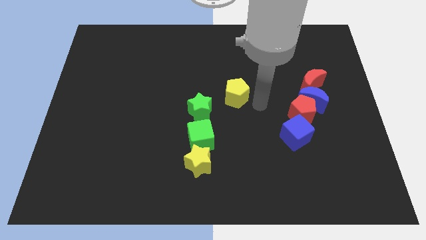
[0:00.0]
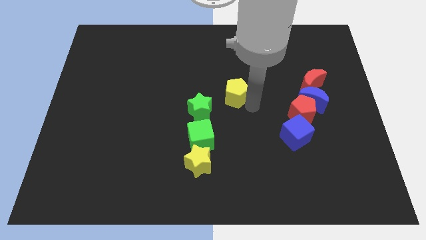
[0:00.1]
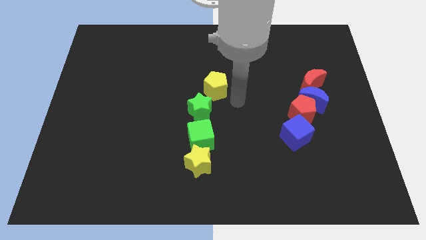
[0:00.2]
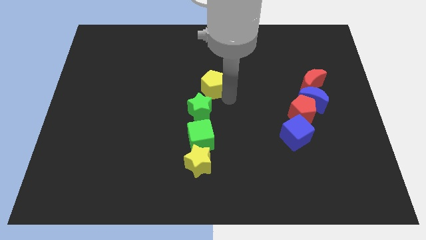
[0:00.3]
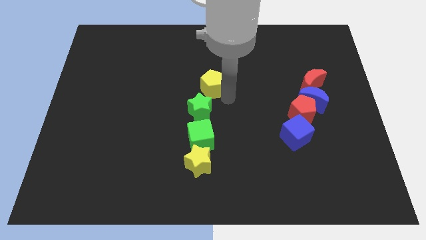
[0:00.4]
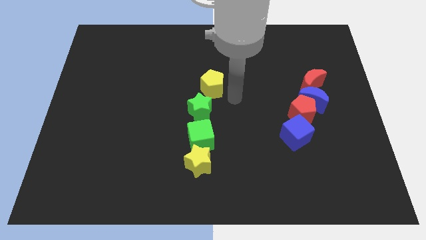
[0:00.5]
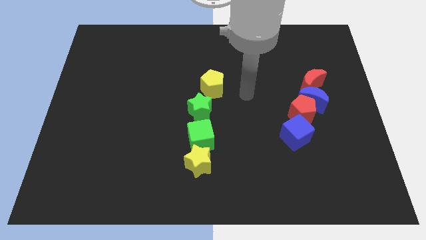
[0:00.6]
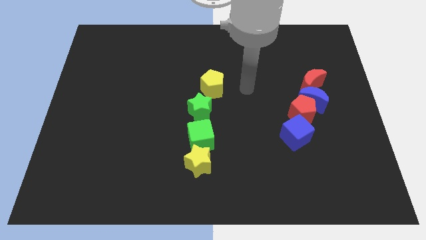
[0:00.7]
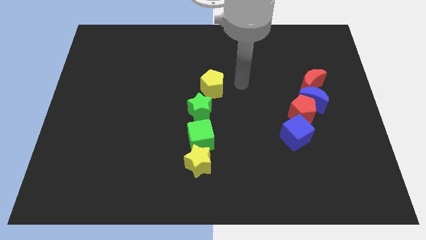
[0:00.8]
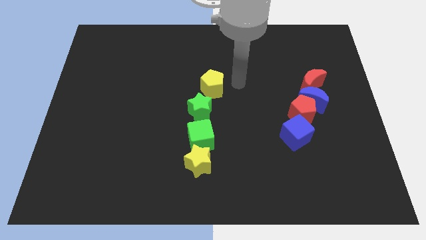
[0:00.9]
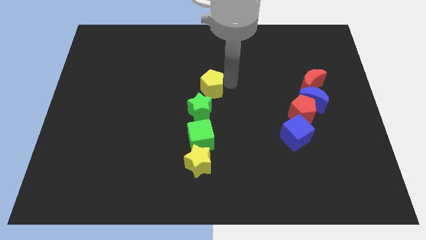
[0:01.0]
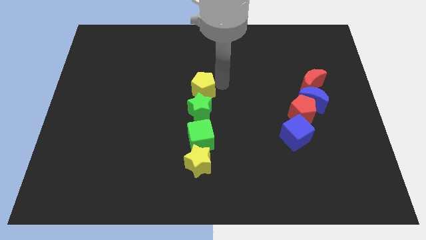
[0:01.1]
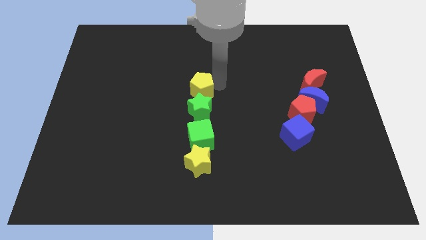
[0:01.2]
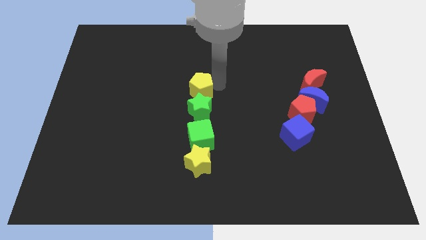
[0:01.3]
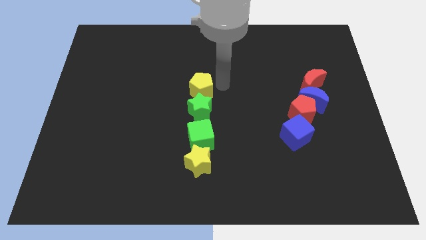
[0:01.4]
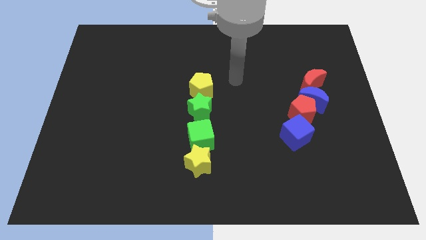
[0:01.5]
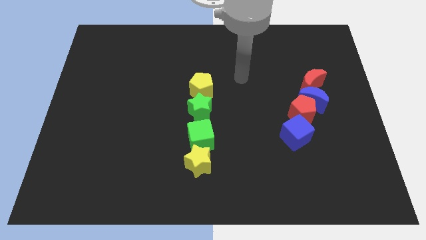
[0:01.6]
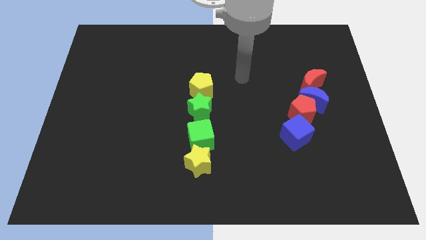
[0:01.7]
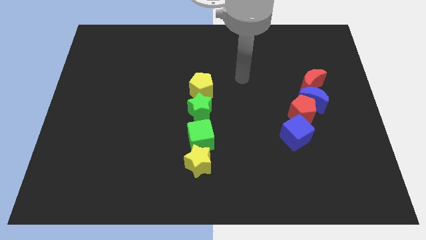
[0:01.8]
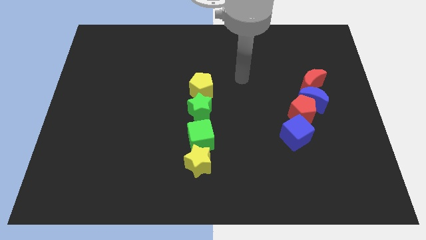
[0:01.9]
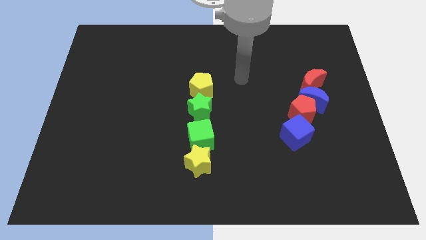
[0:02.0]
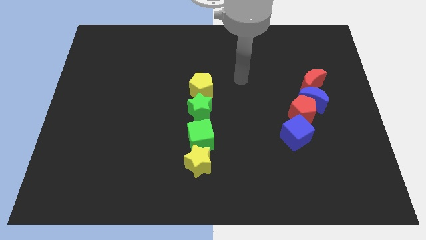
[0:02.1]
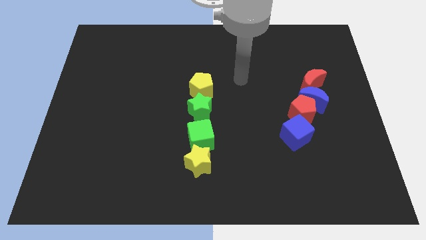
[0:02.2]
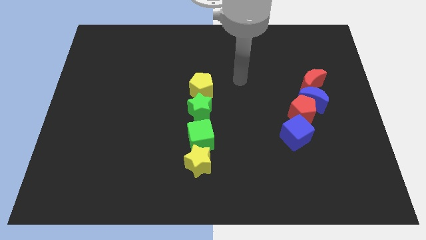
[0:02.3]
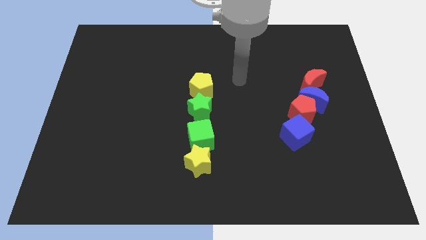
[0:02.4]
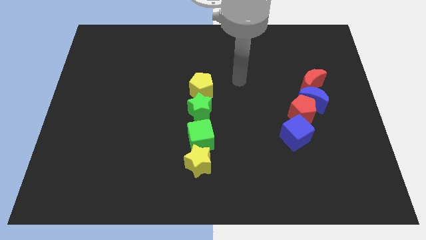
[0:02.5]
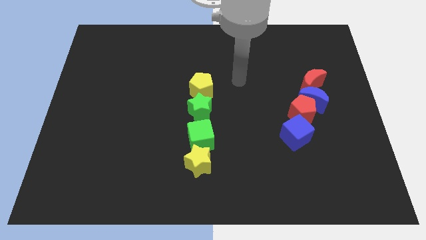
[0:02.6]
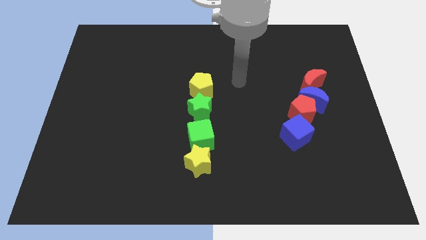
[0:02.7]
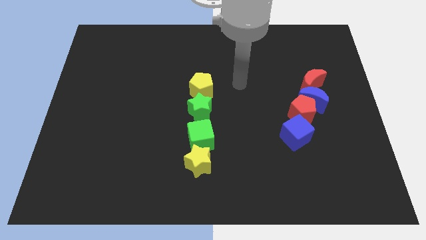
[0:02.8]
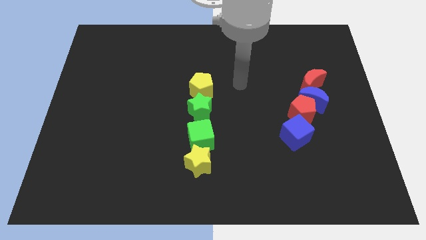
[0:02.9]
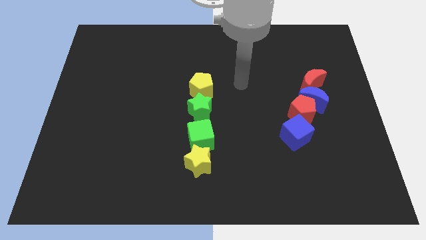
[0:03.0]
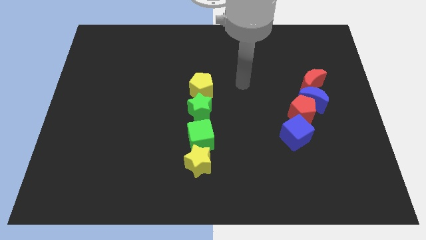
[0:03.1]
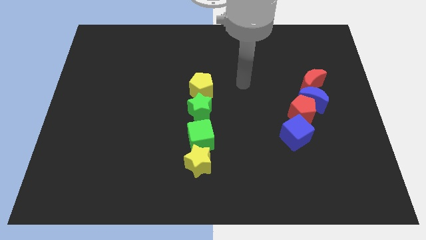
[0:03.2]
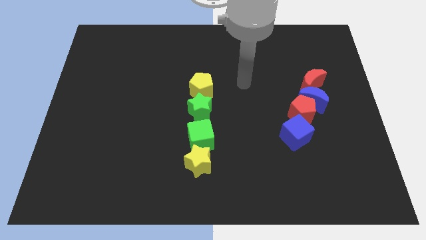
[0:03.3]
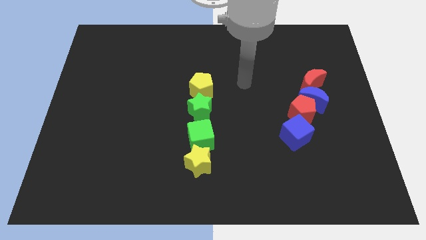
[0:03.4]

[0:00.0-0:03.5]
place the yellow pentagon at center of the board

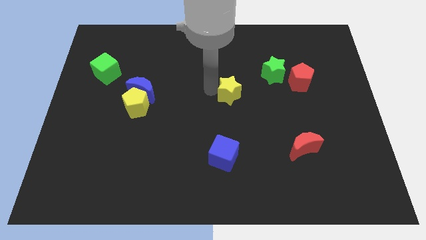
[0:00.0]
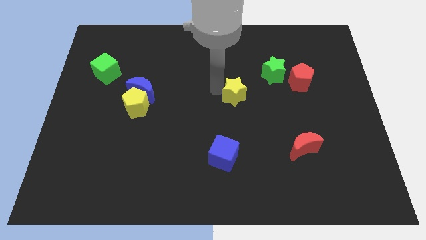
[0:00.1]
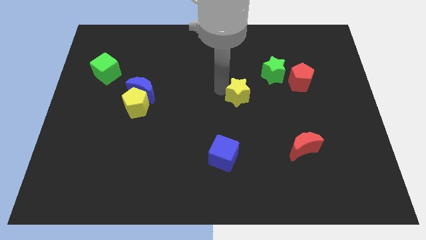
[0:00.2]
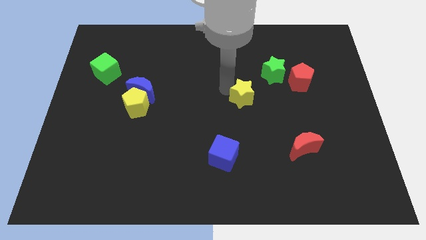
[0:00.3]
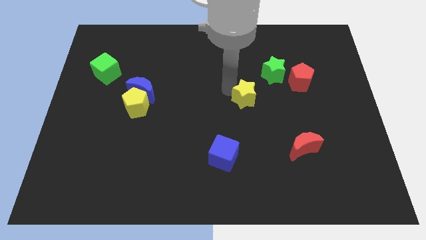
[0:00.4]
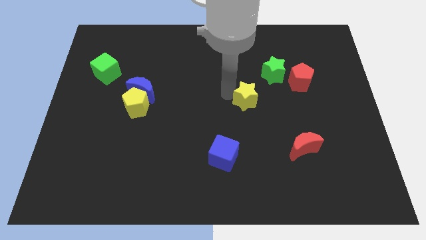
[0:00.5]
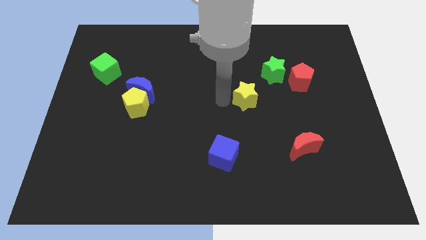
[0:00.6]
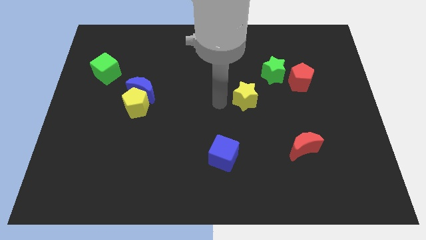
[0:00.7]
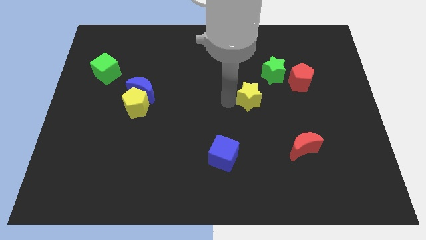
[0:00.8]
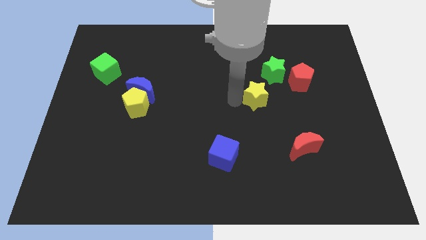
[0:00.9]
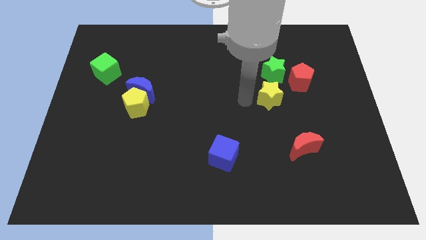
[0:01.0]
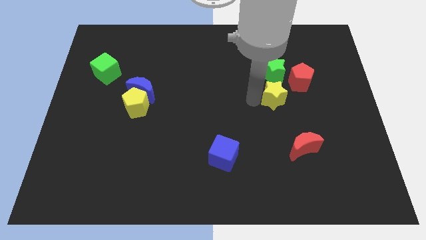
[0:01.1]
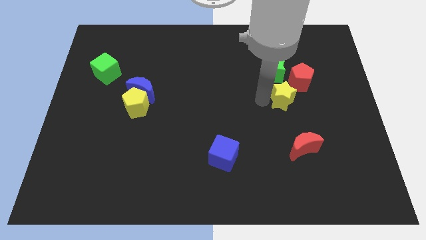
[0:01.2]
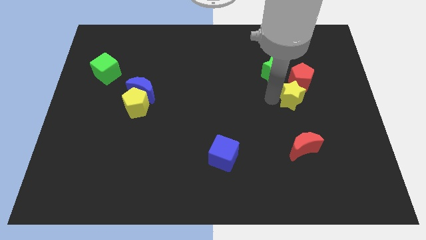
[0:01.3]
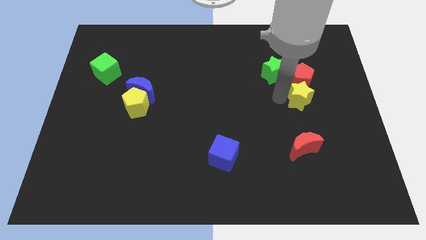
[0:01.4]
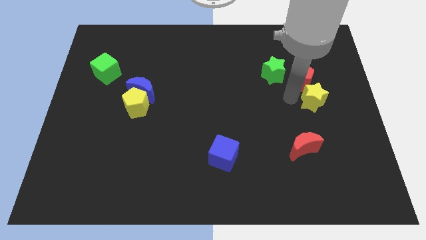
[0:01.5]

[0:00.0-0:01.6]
place yellow star to the bottom of red pentagon

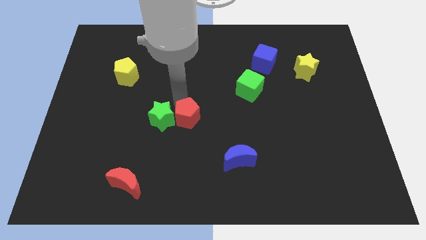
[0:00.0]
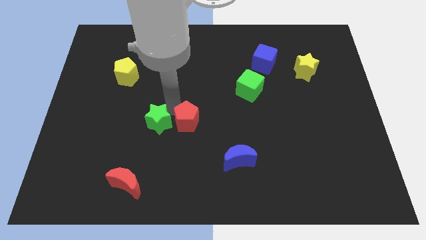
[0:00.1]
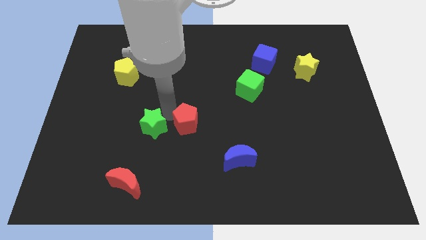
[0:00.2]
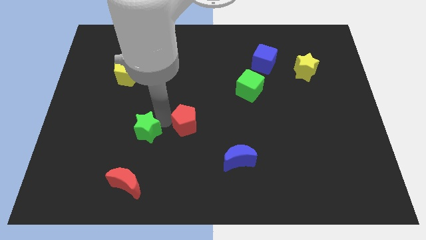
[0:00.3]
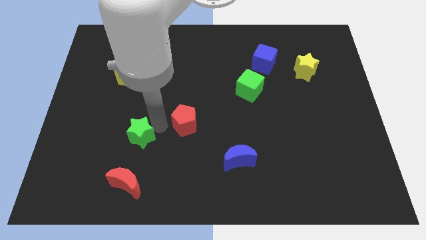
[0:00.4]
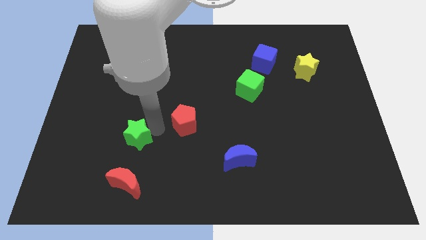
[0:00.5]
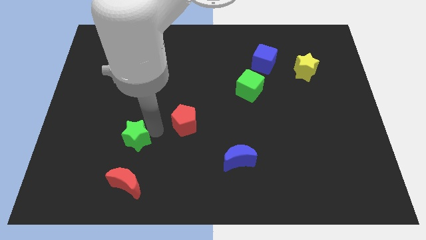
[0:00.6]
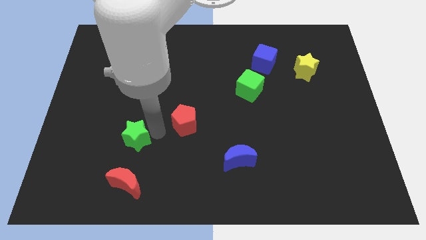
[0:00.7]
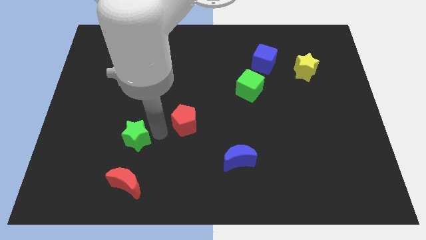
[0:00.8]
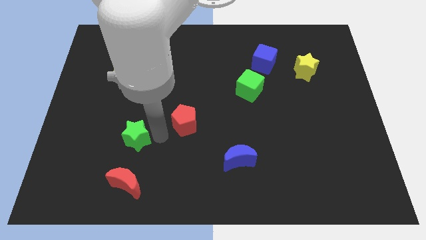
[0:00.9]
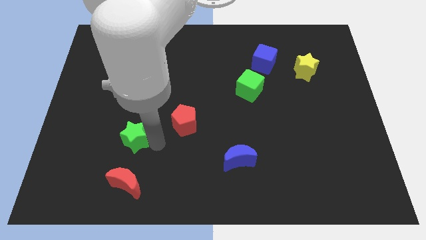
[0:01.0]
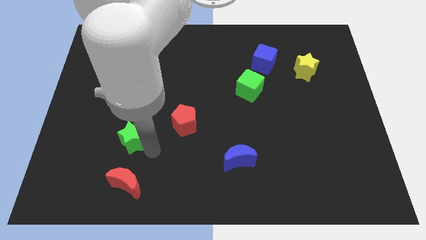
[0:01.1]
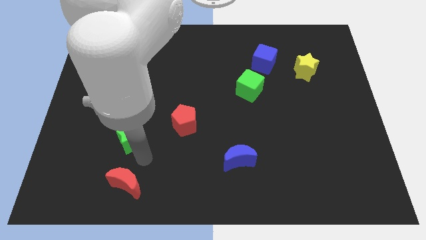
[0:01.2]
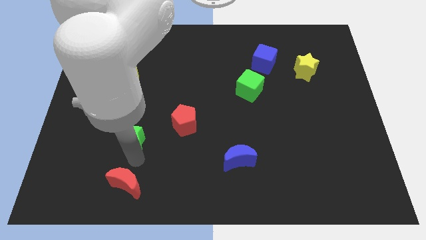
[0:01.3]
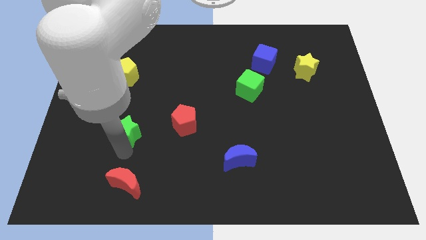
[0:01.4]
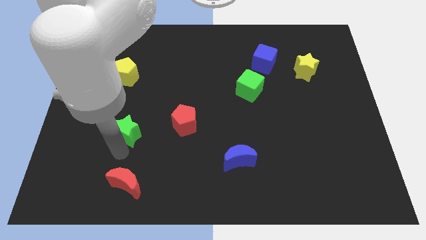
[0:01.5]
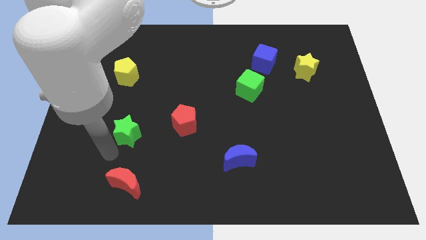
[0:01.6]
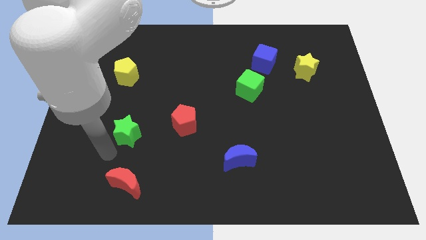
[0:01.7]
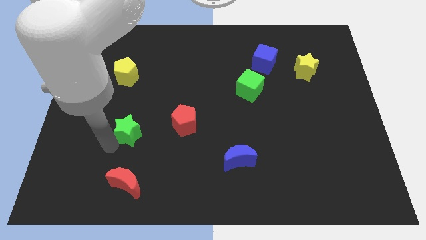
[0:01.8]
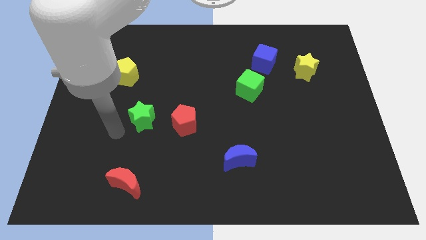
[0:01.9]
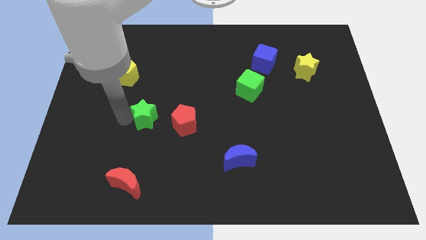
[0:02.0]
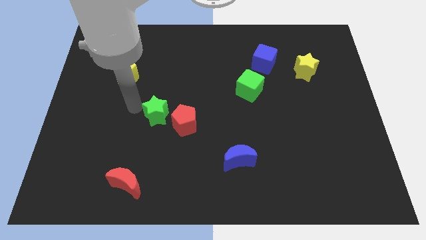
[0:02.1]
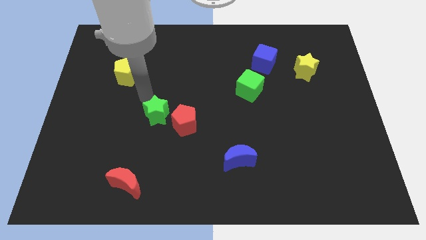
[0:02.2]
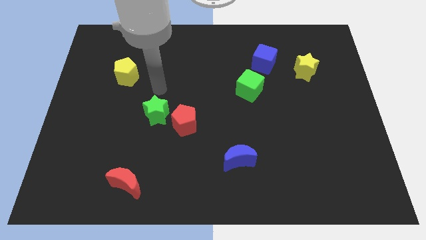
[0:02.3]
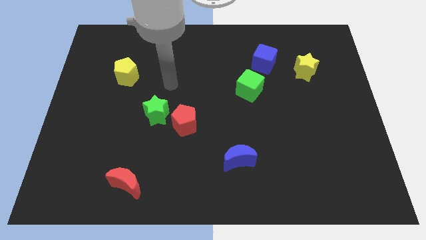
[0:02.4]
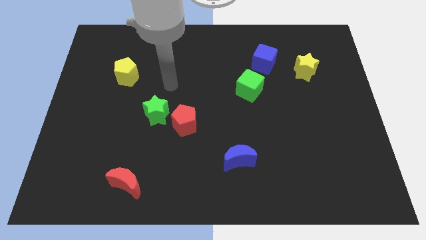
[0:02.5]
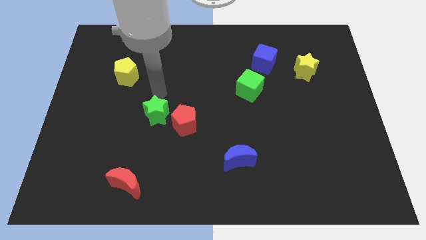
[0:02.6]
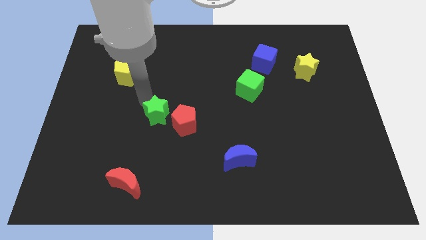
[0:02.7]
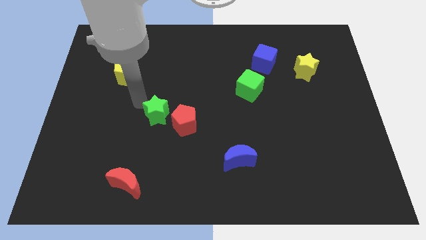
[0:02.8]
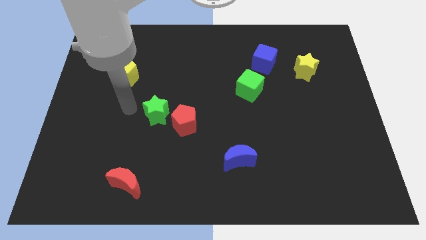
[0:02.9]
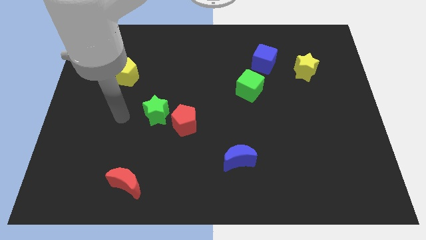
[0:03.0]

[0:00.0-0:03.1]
place the green star near to the red pentagon

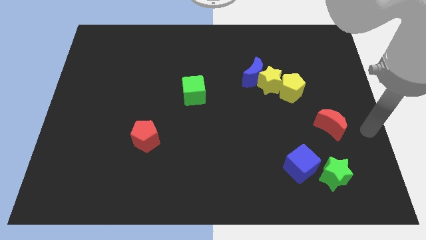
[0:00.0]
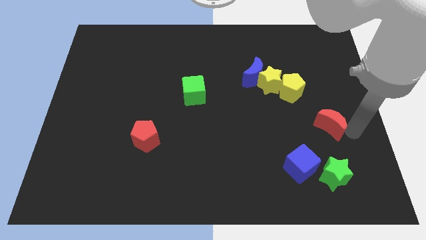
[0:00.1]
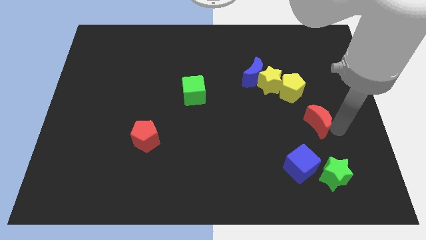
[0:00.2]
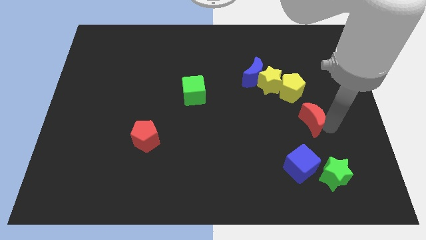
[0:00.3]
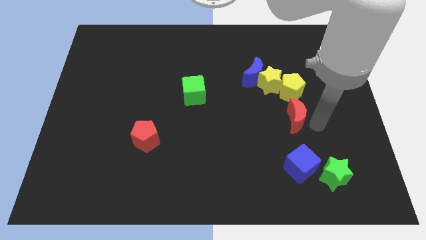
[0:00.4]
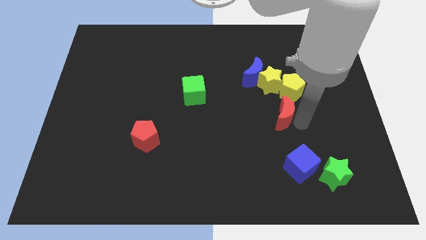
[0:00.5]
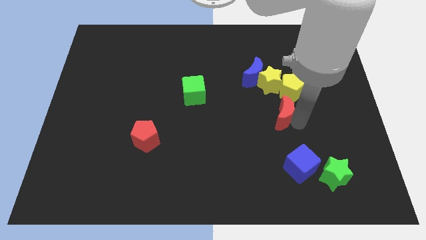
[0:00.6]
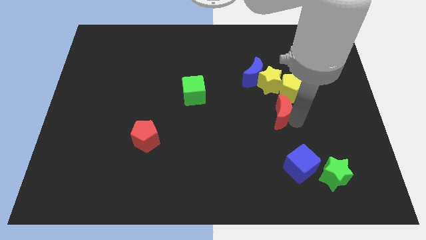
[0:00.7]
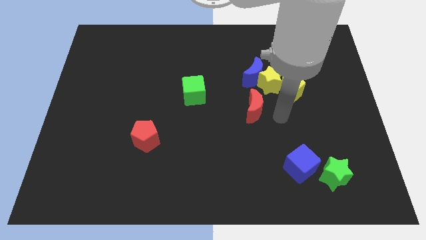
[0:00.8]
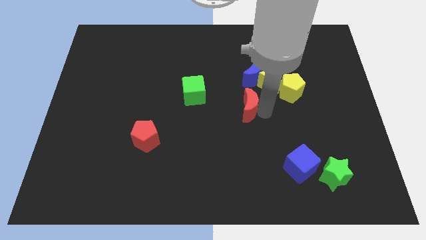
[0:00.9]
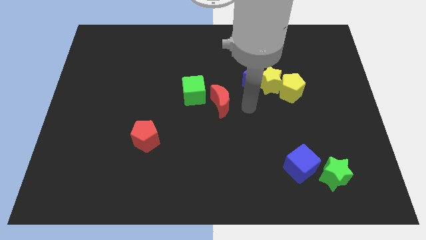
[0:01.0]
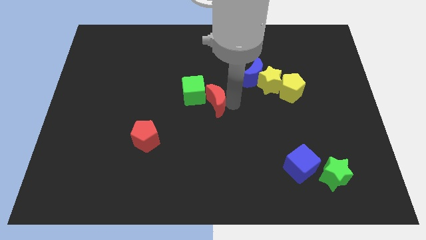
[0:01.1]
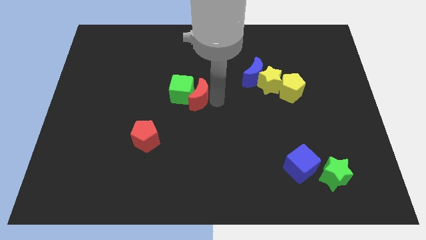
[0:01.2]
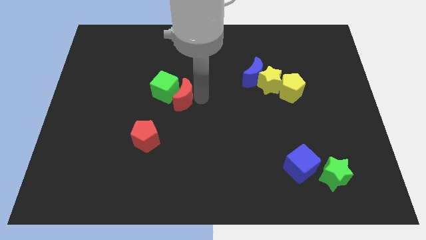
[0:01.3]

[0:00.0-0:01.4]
push the red crescent into the green cube
